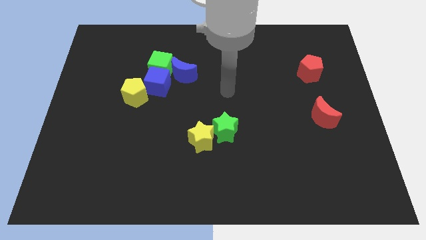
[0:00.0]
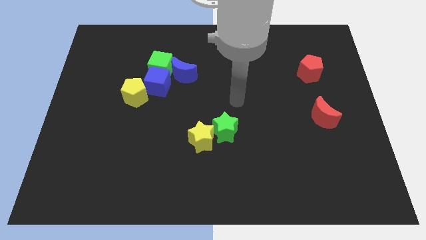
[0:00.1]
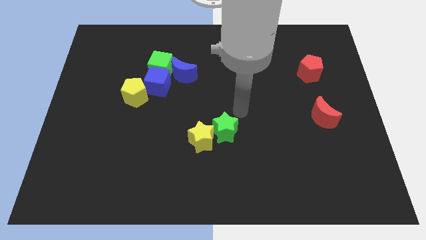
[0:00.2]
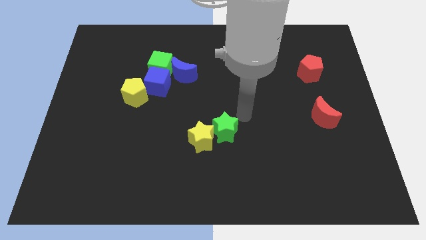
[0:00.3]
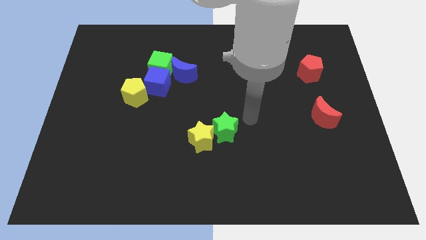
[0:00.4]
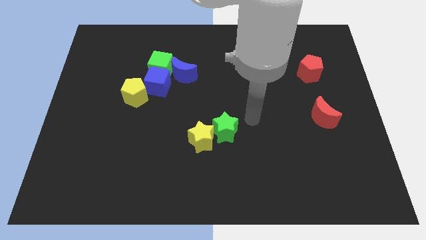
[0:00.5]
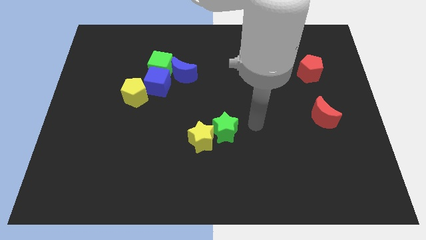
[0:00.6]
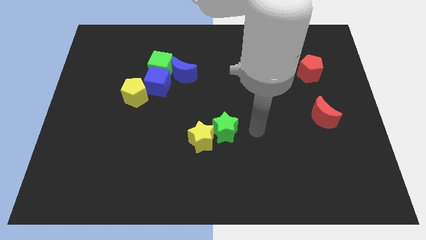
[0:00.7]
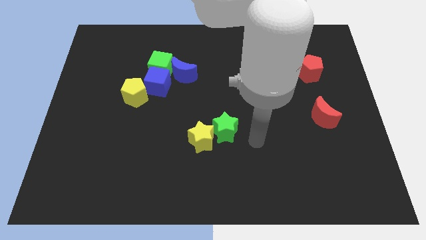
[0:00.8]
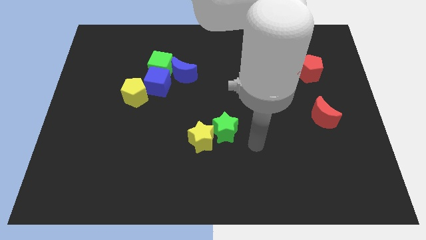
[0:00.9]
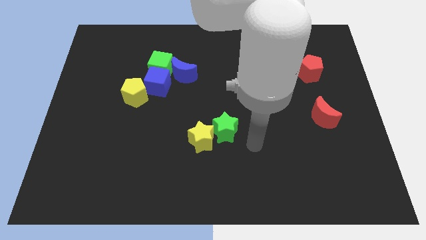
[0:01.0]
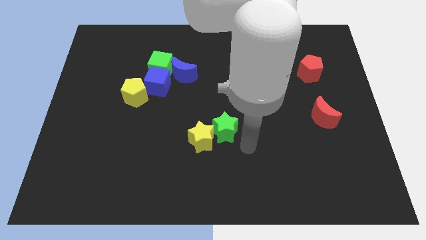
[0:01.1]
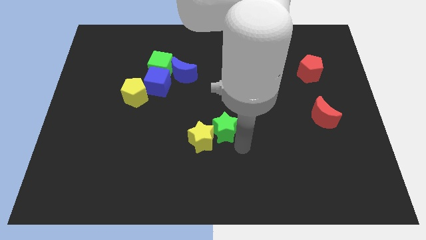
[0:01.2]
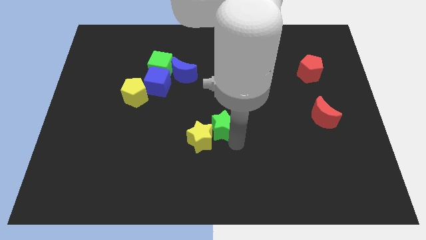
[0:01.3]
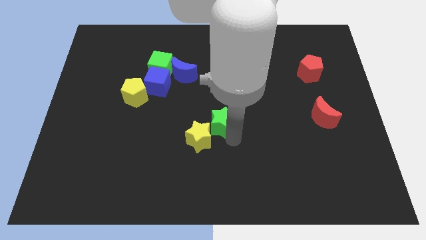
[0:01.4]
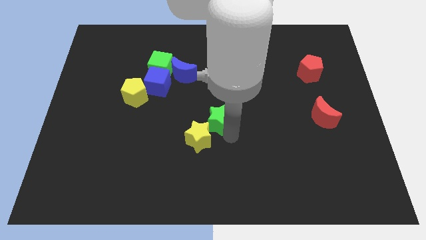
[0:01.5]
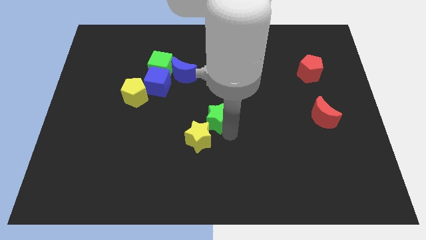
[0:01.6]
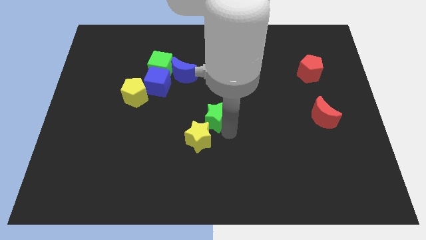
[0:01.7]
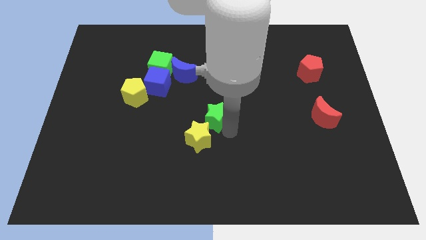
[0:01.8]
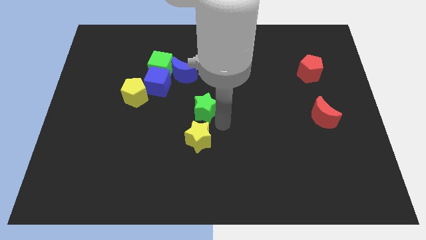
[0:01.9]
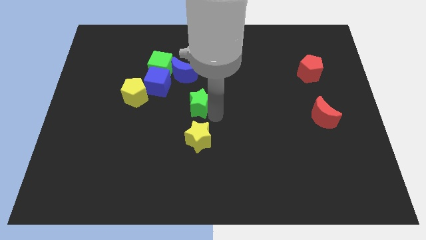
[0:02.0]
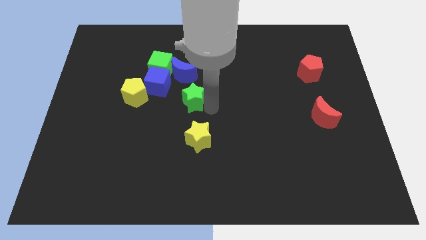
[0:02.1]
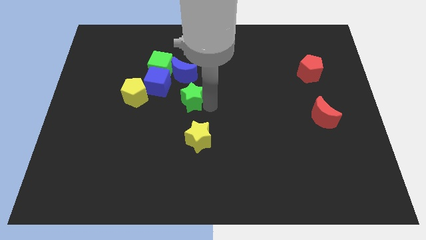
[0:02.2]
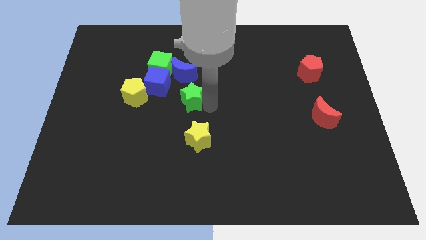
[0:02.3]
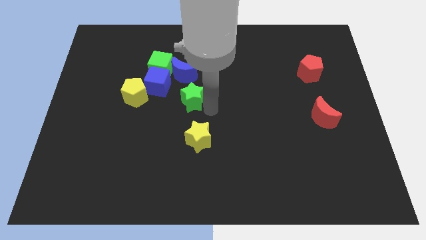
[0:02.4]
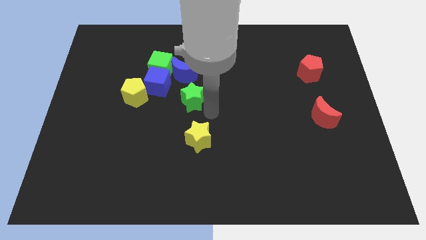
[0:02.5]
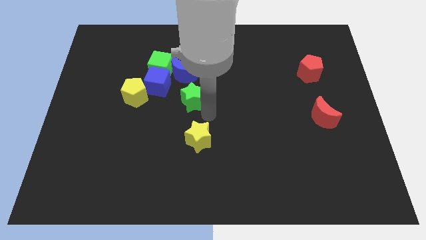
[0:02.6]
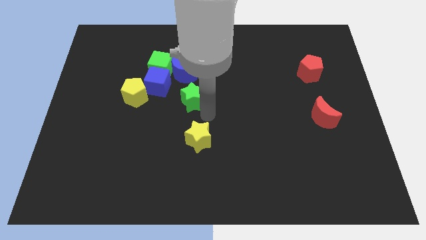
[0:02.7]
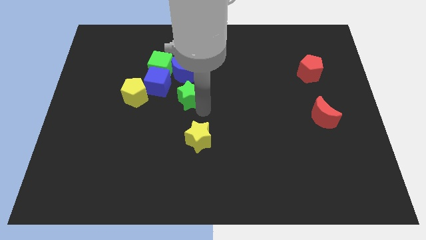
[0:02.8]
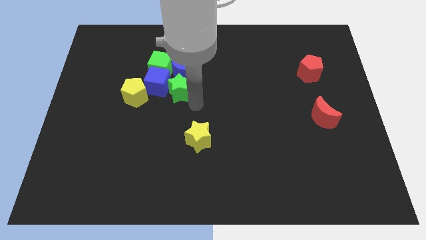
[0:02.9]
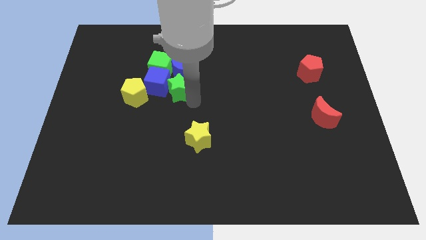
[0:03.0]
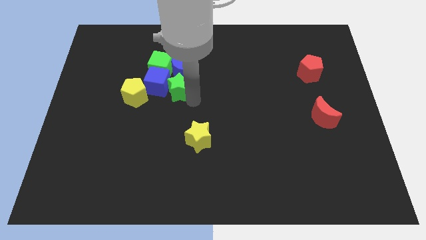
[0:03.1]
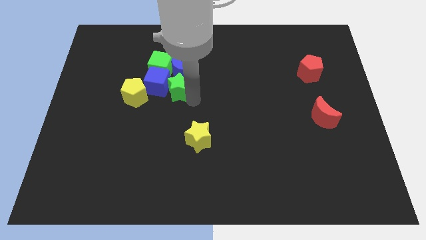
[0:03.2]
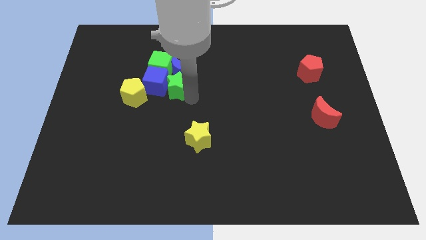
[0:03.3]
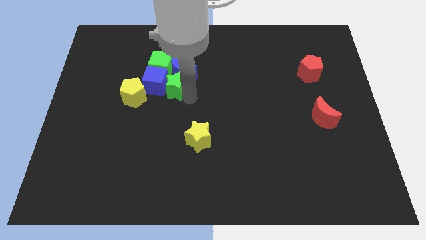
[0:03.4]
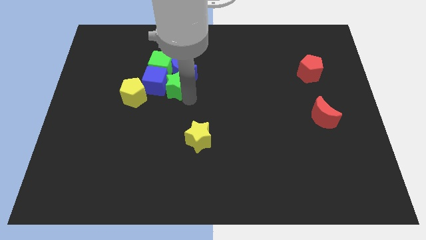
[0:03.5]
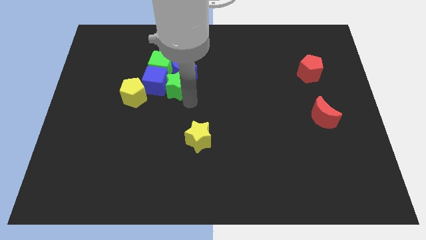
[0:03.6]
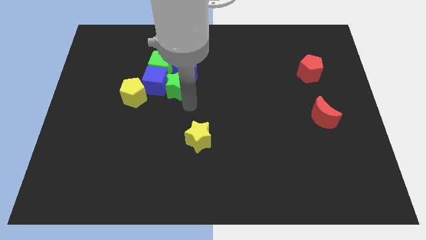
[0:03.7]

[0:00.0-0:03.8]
push the green star into the blue cube

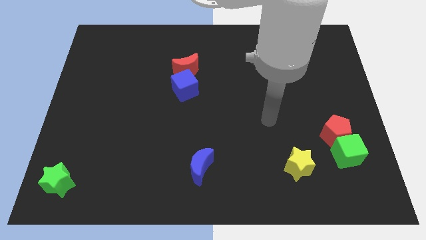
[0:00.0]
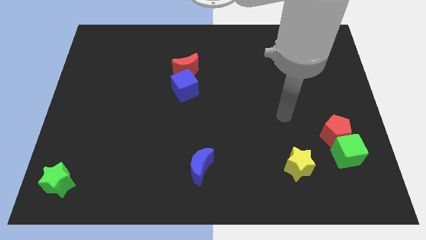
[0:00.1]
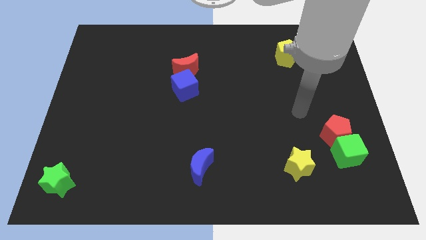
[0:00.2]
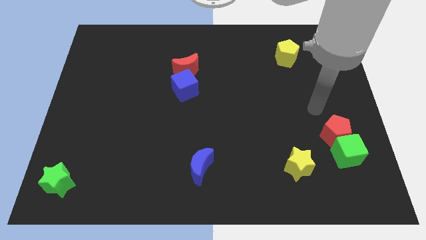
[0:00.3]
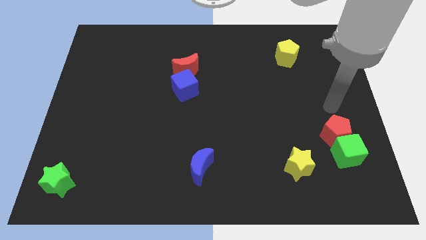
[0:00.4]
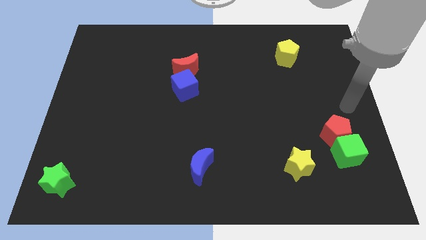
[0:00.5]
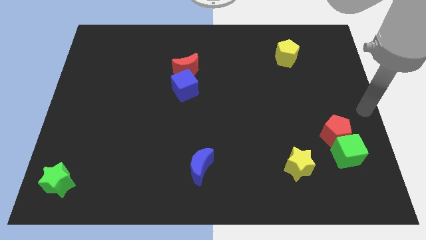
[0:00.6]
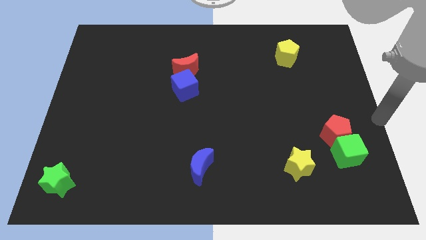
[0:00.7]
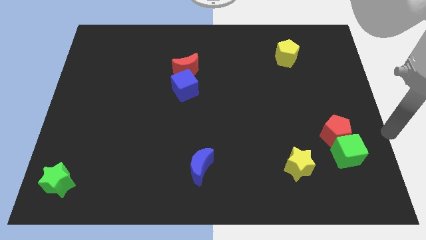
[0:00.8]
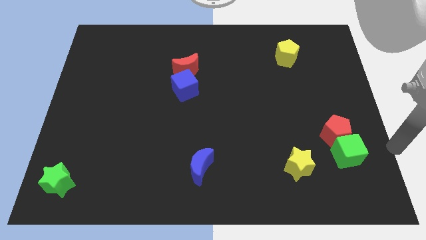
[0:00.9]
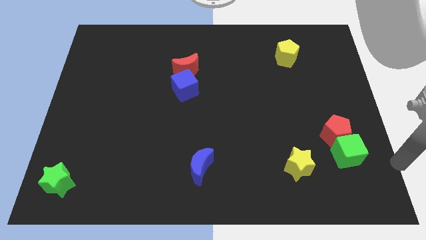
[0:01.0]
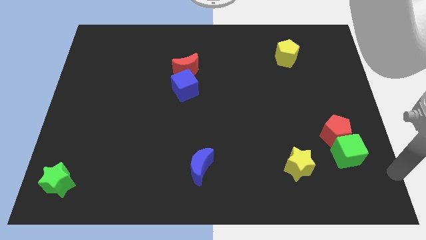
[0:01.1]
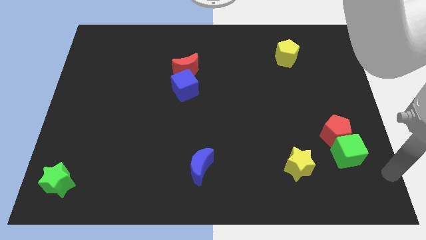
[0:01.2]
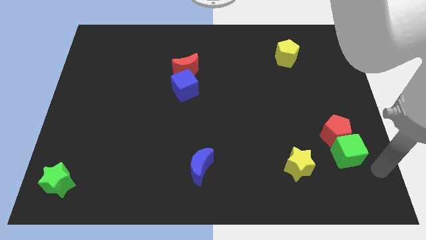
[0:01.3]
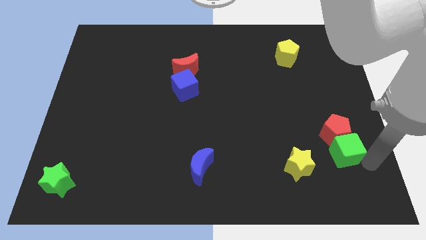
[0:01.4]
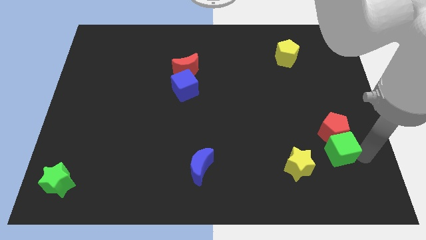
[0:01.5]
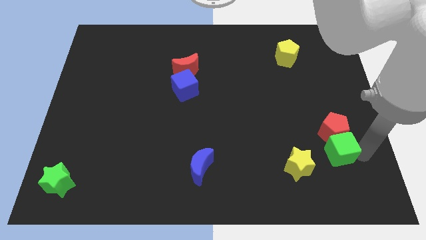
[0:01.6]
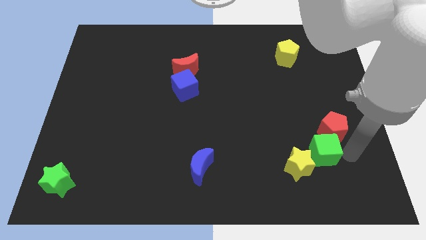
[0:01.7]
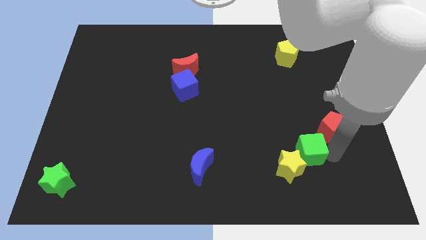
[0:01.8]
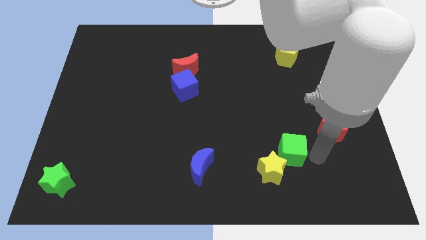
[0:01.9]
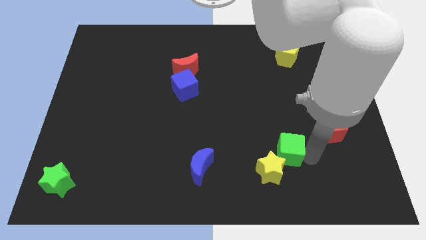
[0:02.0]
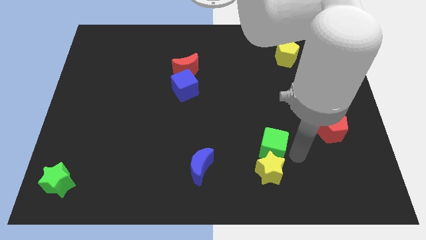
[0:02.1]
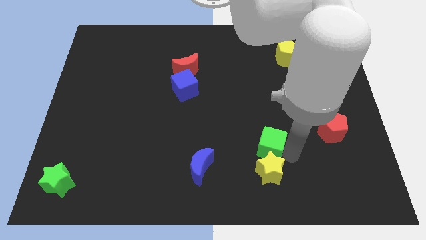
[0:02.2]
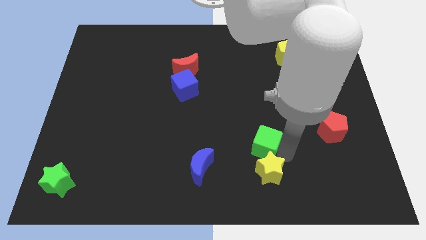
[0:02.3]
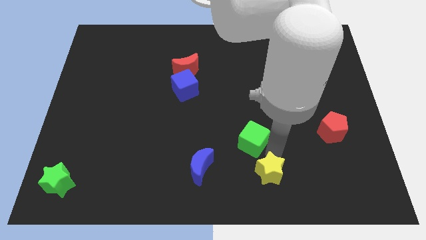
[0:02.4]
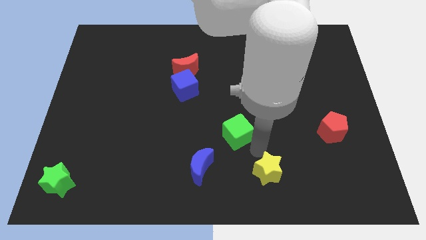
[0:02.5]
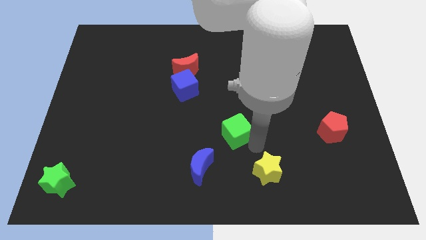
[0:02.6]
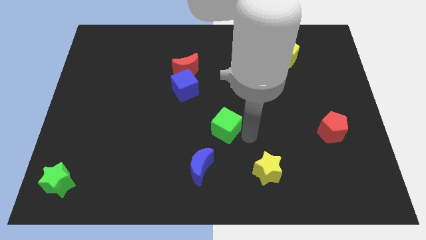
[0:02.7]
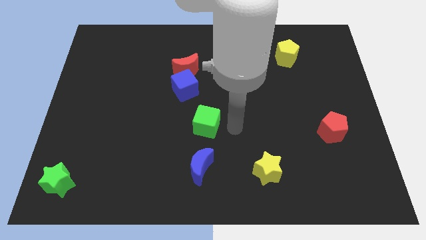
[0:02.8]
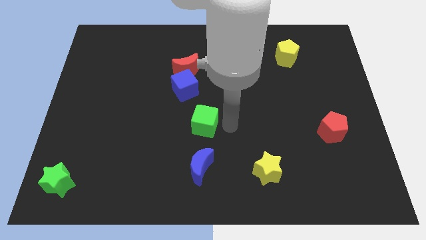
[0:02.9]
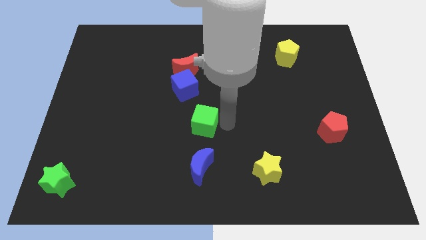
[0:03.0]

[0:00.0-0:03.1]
move the green cube to the top side of the blue crescent
